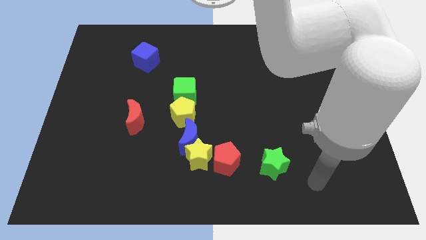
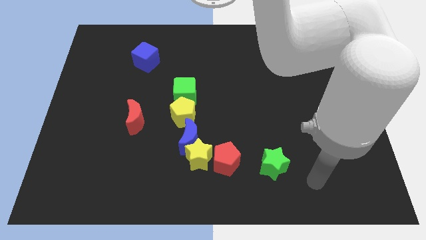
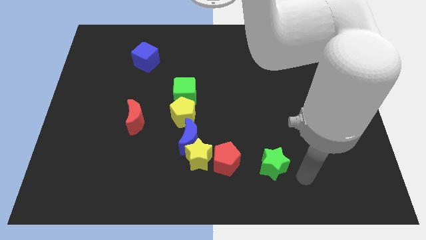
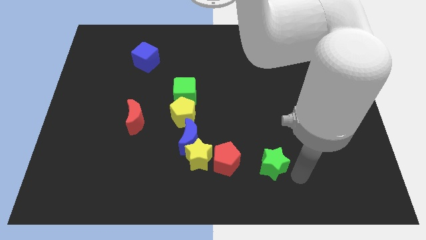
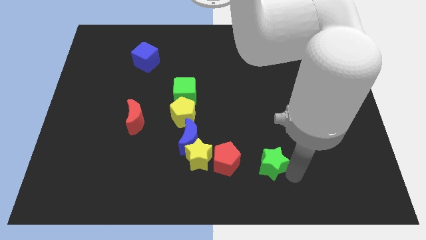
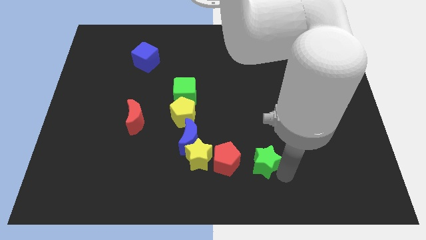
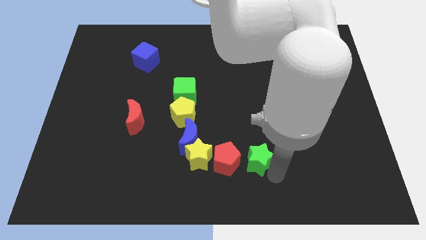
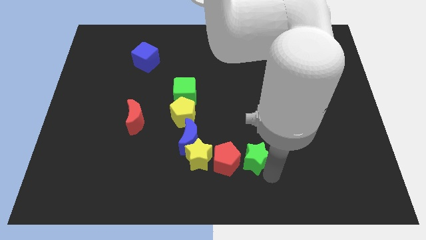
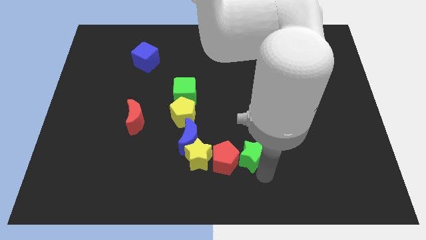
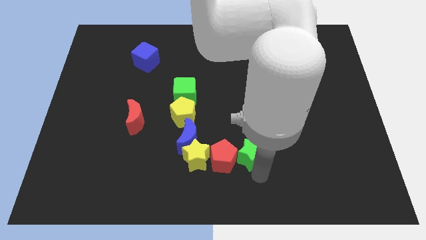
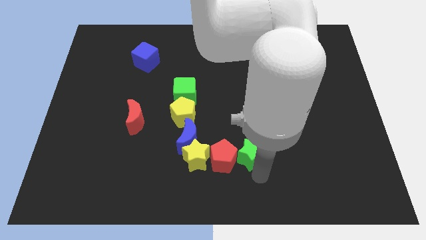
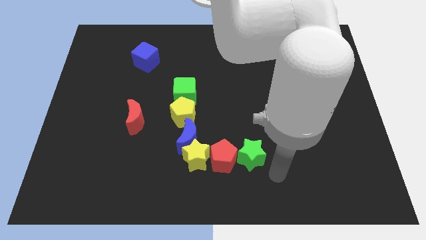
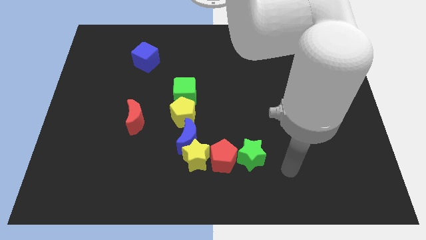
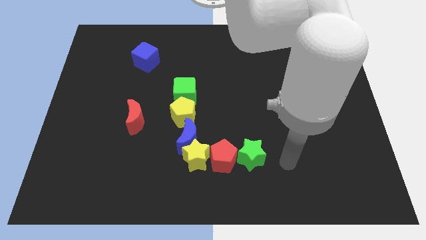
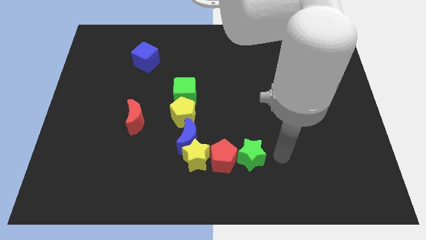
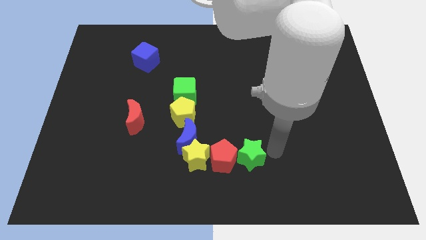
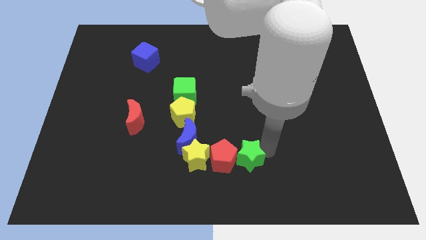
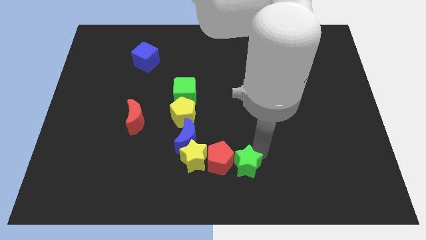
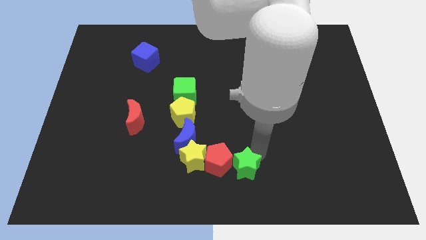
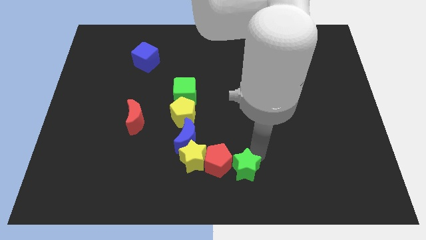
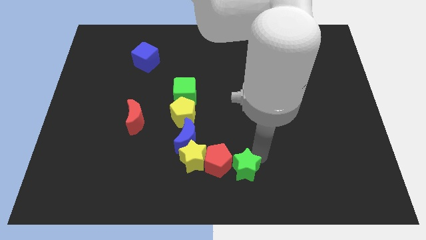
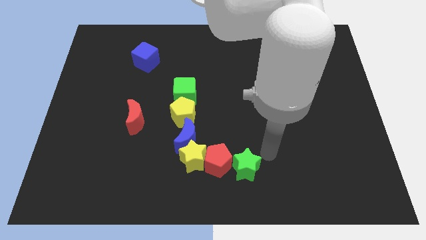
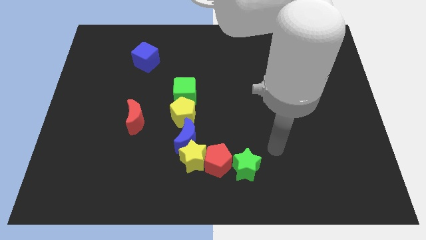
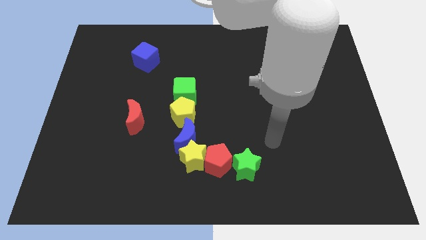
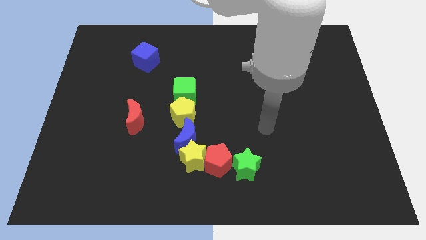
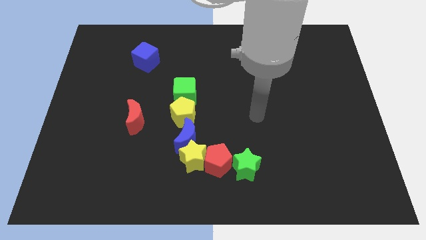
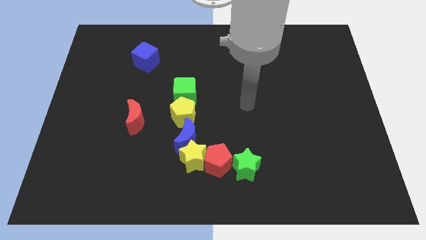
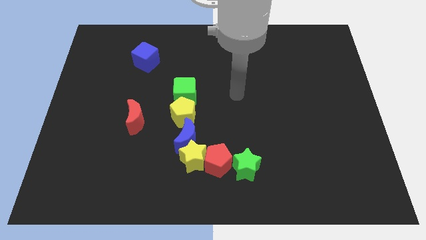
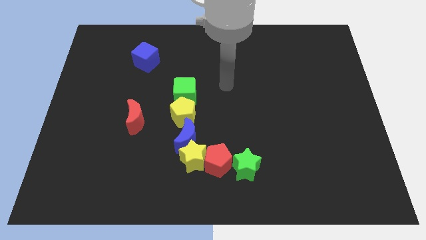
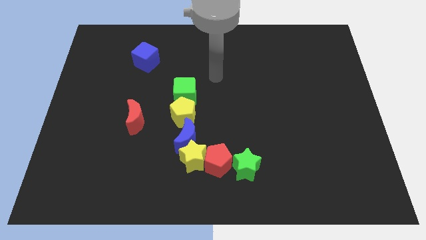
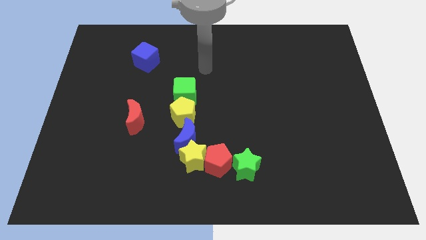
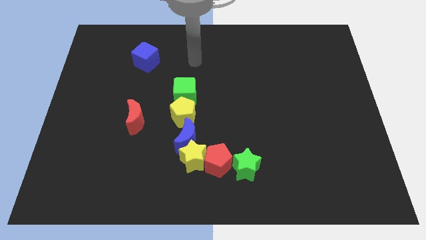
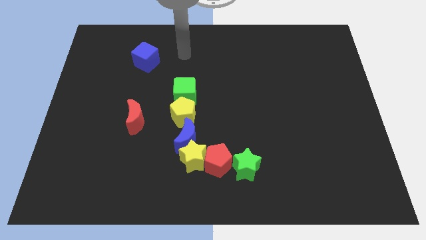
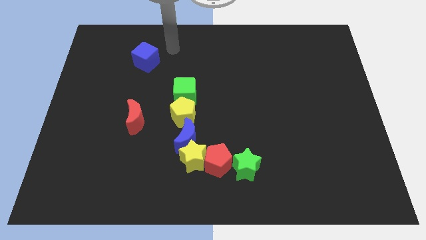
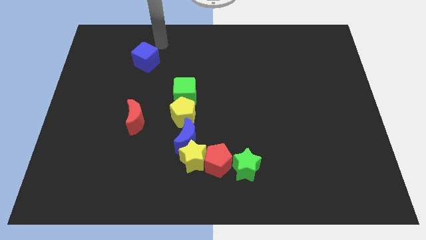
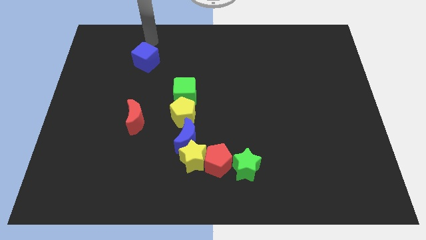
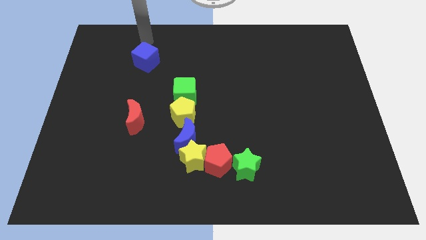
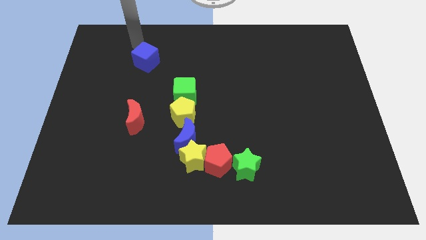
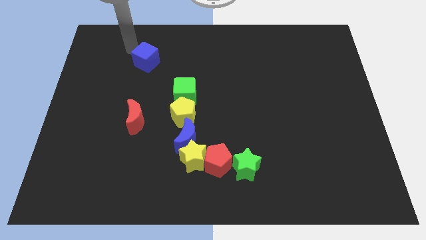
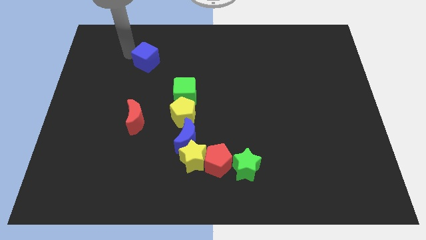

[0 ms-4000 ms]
place the arm near the blue cube

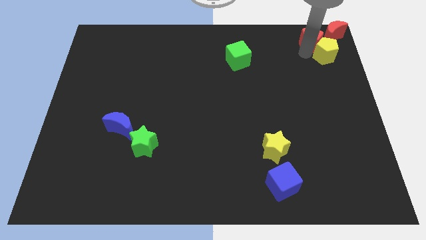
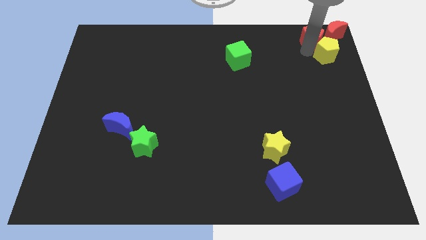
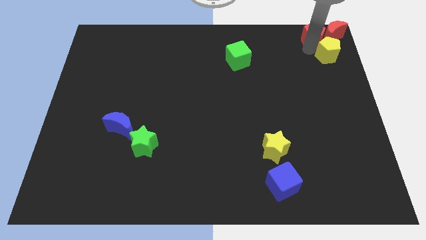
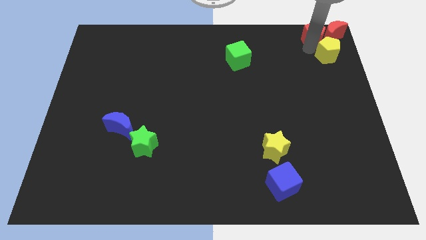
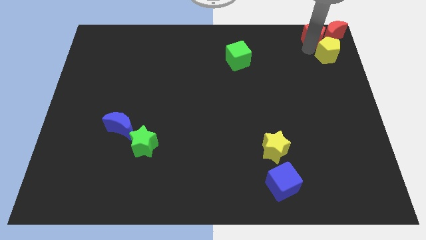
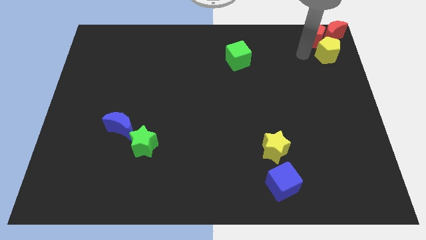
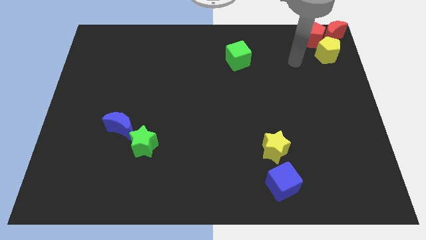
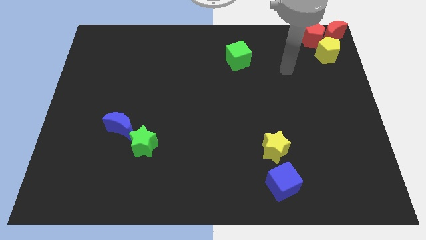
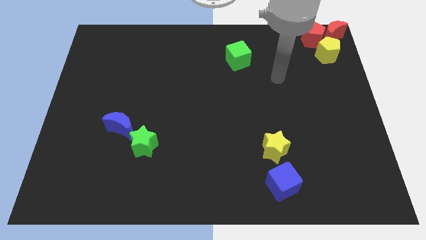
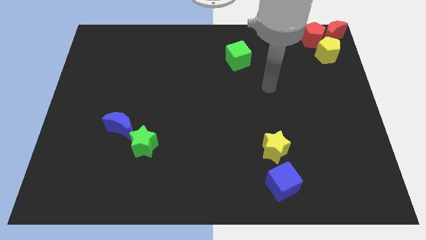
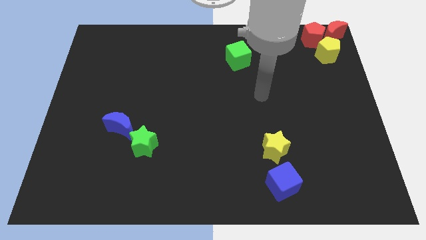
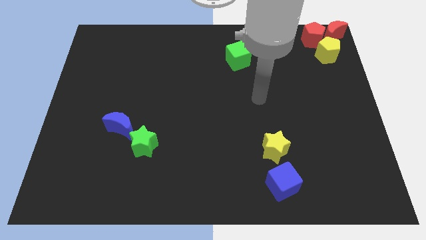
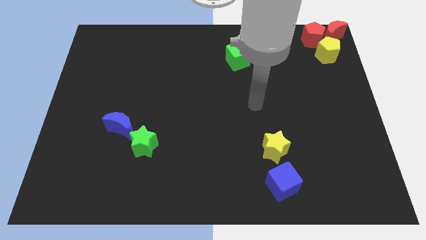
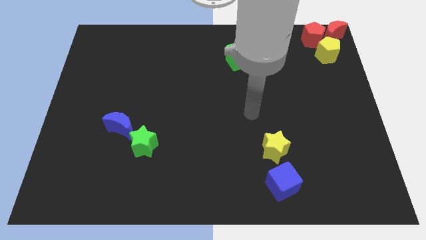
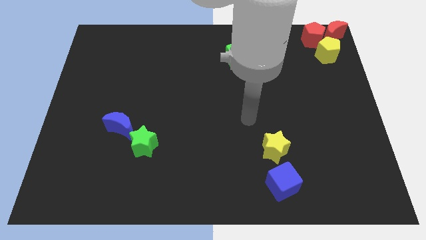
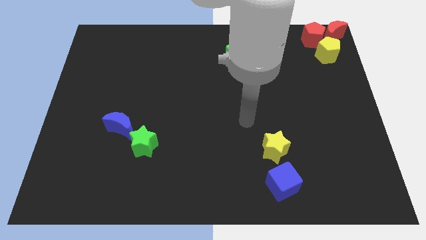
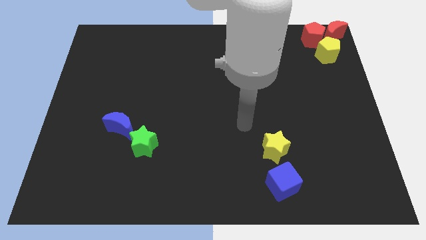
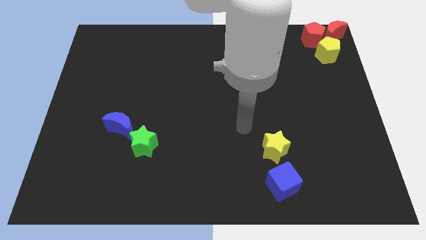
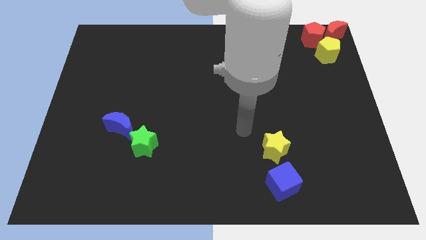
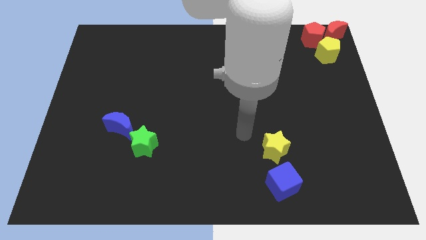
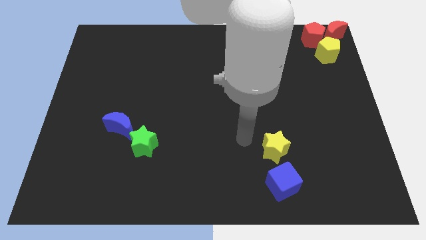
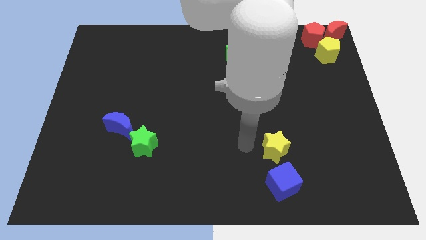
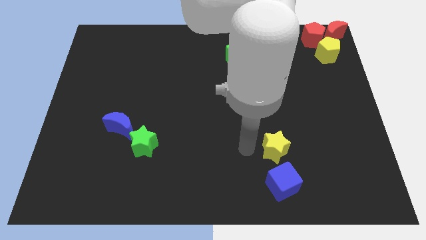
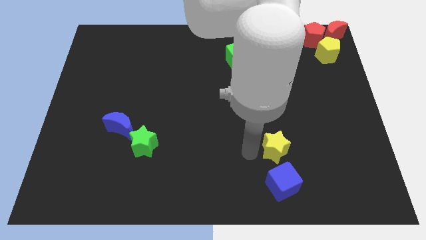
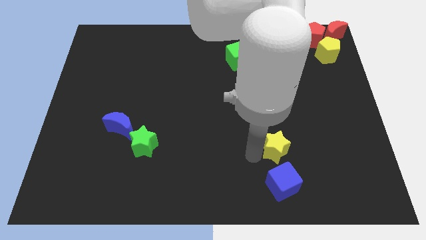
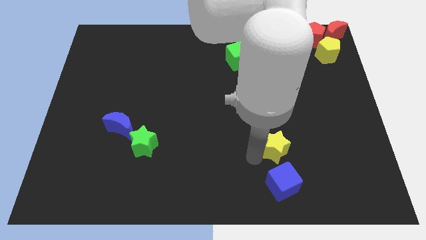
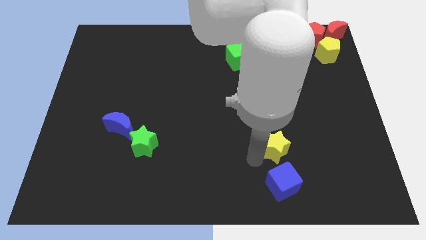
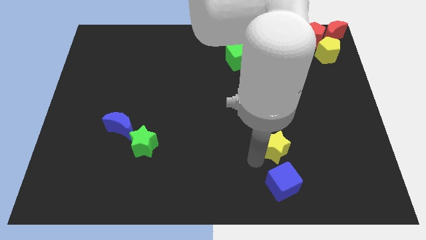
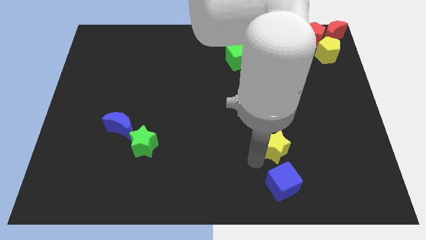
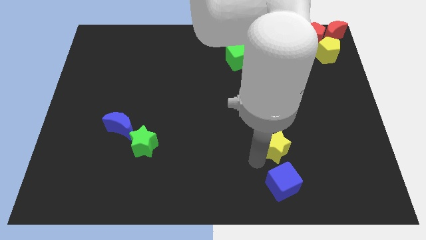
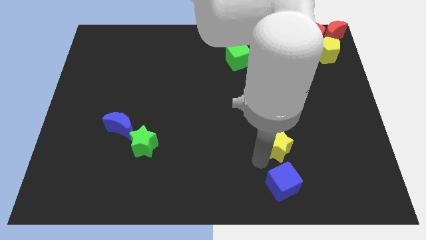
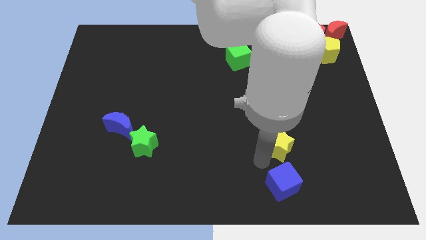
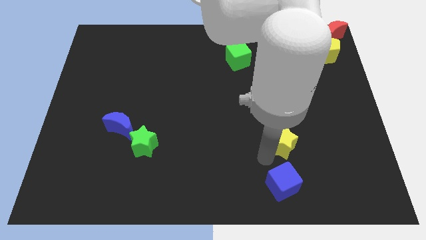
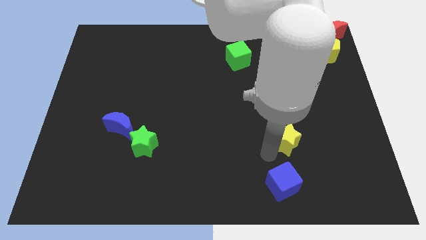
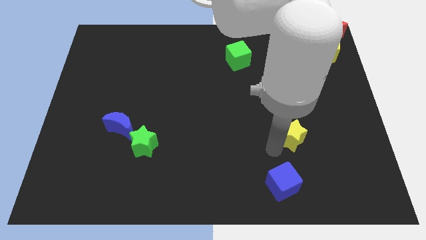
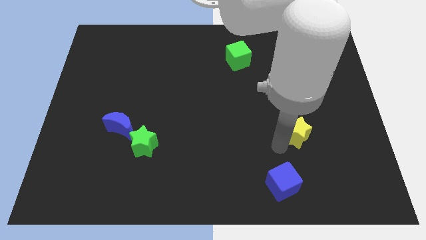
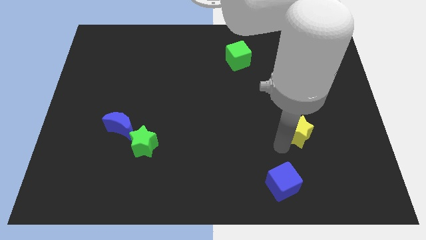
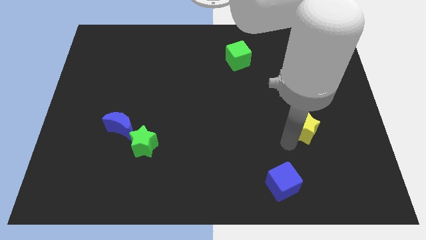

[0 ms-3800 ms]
move the yellow star diagonally to the top right of the blue cube

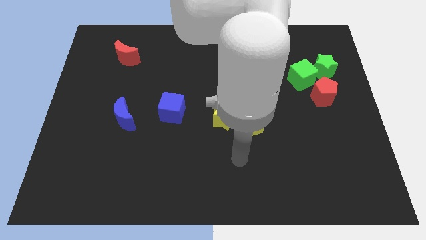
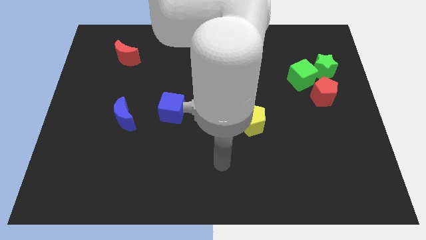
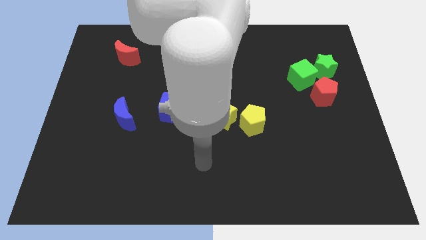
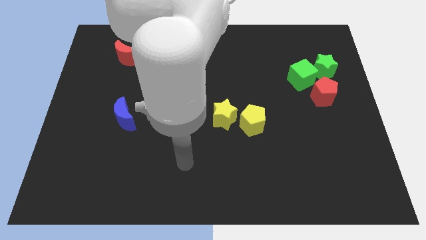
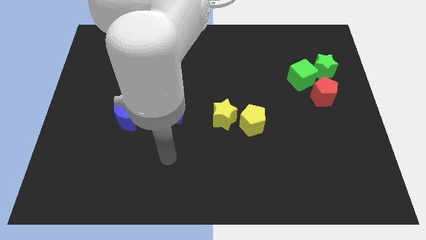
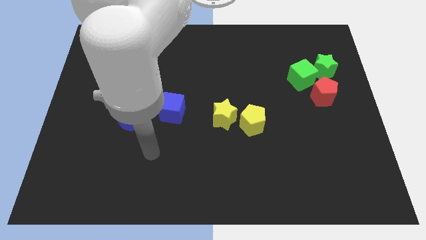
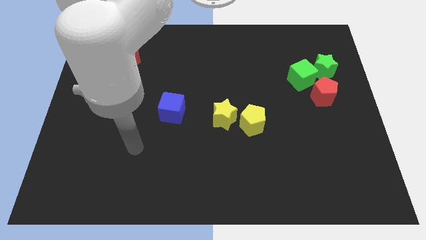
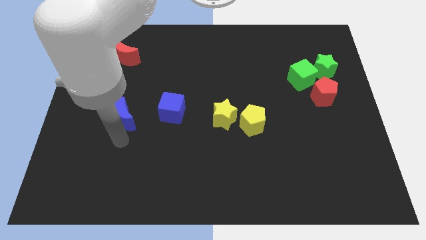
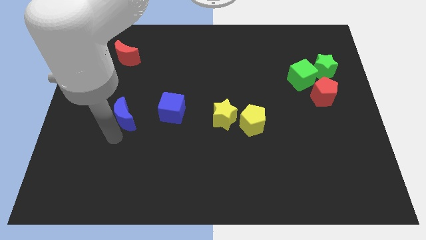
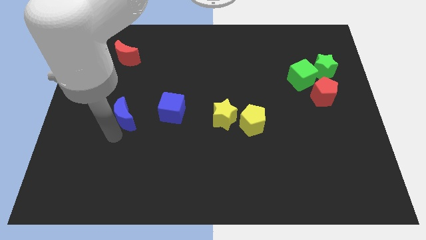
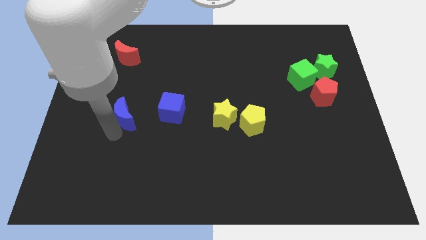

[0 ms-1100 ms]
place your arm at the bottom of blue crescent
